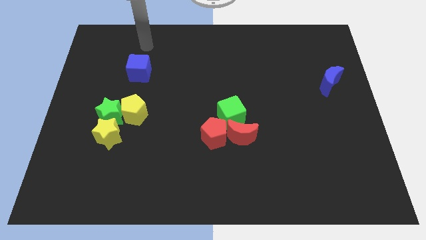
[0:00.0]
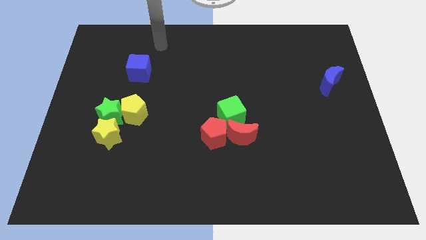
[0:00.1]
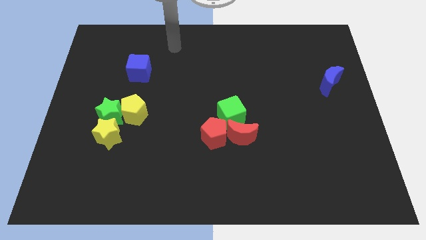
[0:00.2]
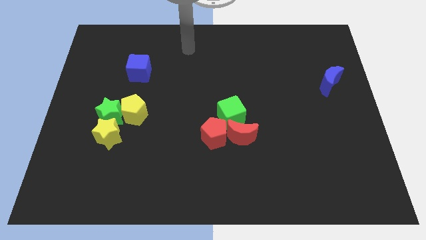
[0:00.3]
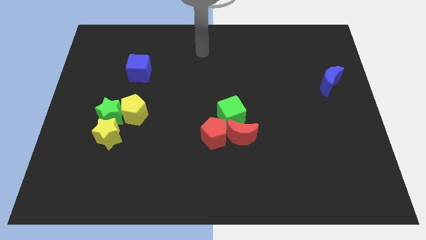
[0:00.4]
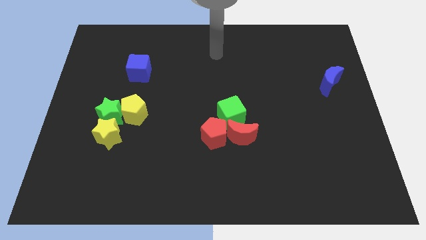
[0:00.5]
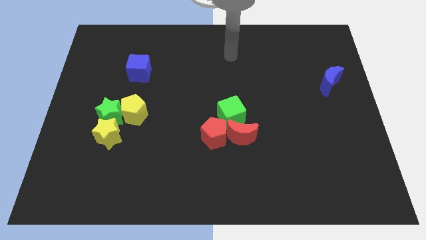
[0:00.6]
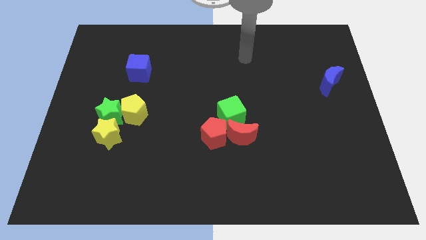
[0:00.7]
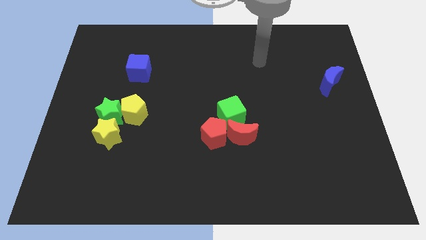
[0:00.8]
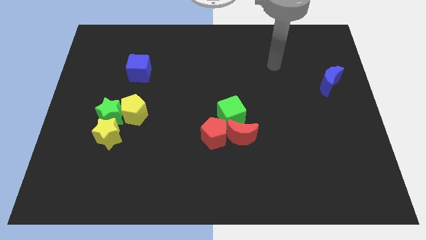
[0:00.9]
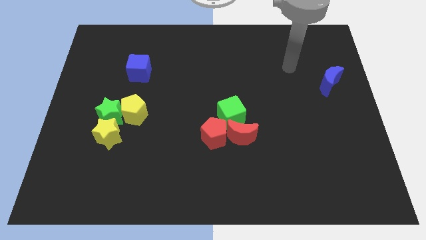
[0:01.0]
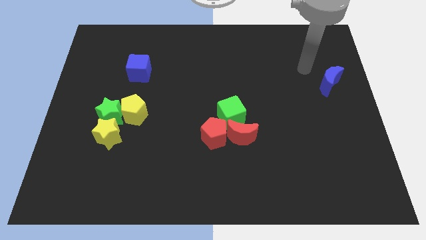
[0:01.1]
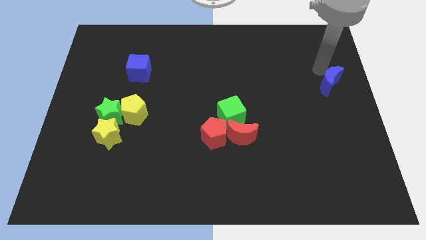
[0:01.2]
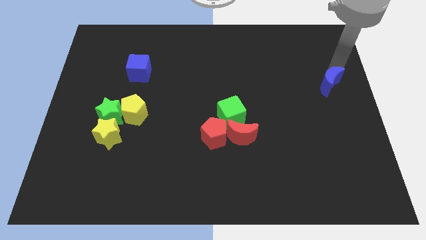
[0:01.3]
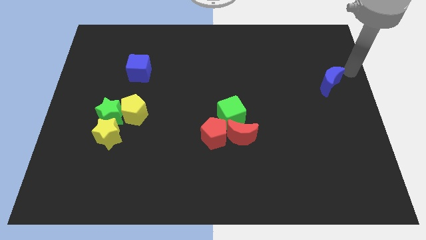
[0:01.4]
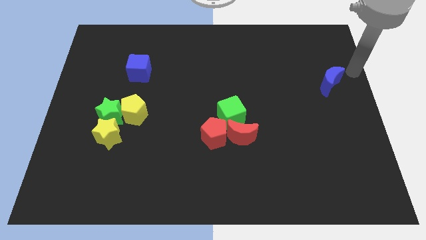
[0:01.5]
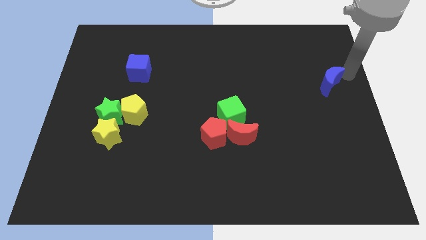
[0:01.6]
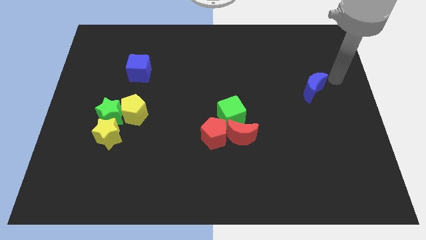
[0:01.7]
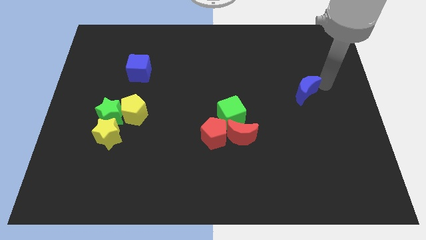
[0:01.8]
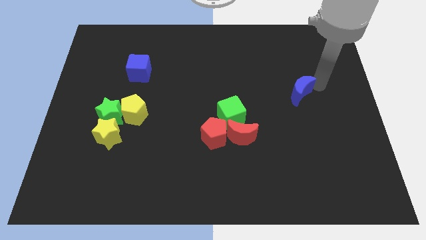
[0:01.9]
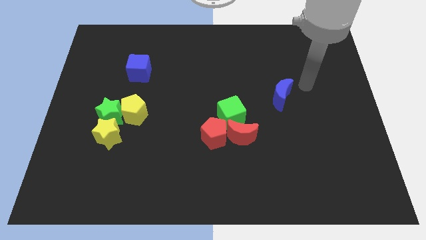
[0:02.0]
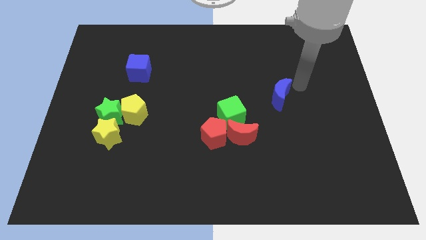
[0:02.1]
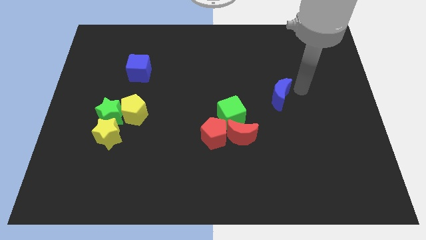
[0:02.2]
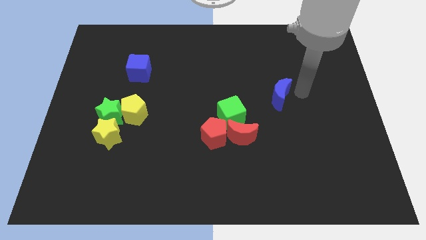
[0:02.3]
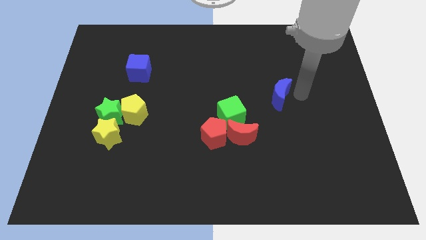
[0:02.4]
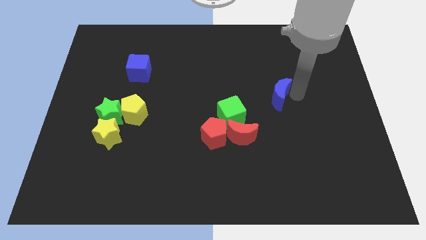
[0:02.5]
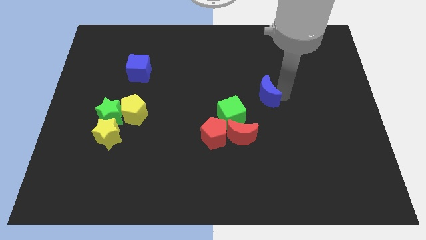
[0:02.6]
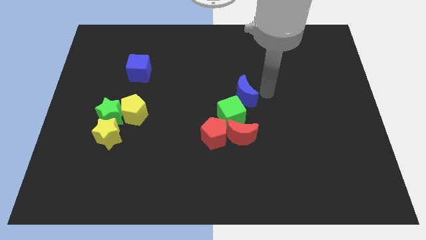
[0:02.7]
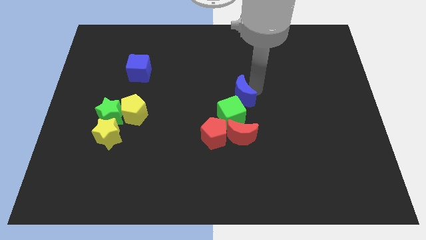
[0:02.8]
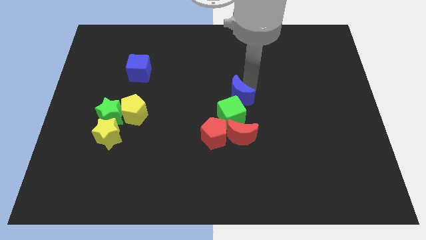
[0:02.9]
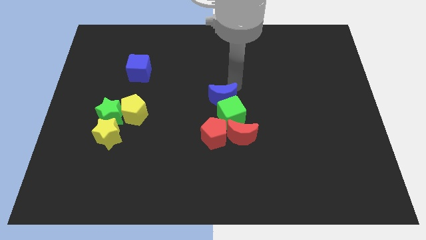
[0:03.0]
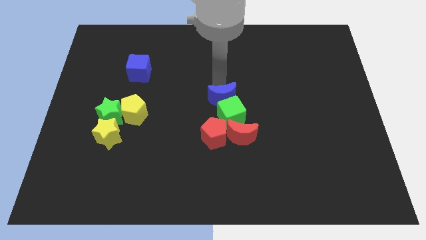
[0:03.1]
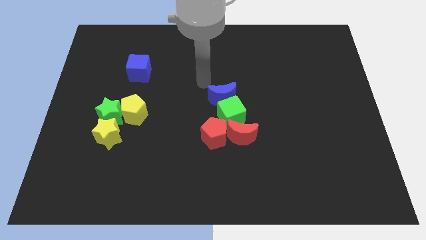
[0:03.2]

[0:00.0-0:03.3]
place the blue crescent to the top of the green cube

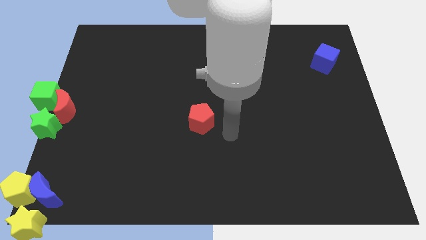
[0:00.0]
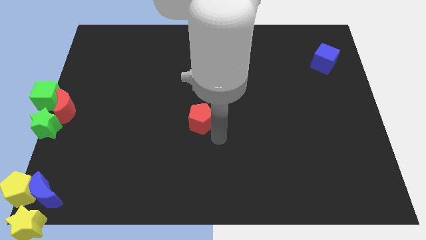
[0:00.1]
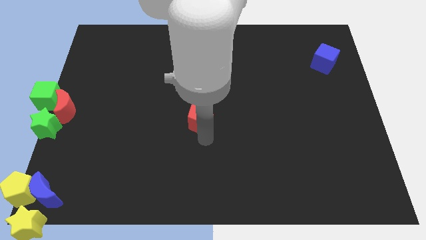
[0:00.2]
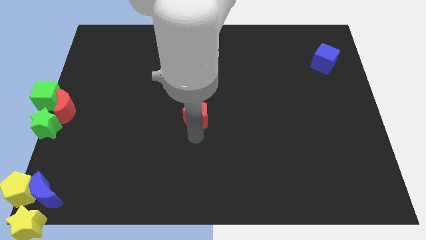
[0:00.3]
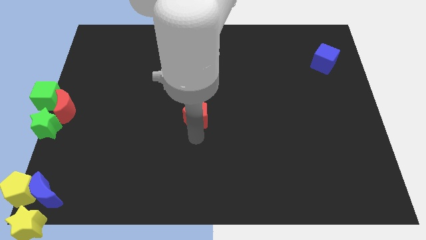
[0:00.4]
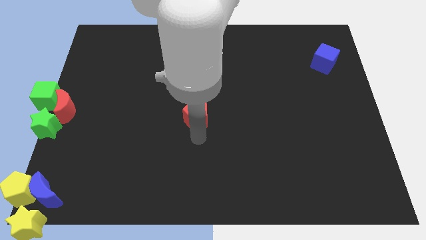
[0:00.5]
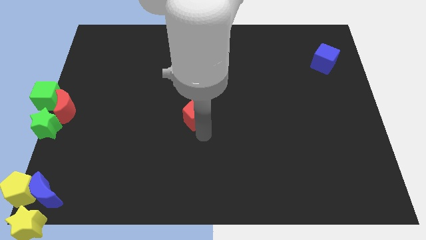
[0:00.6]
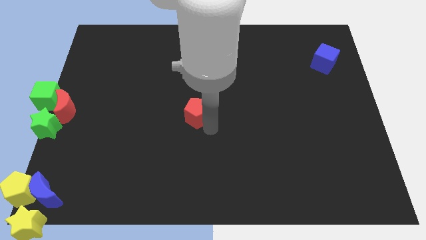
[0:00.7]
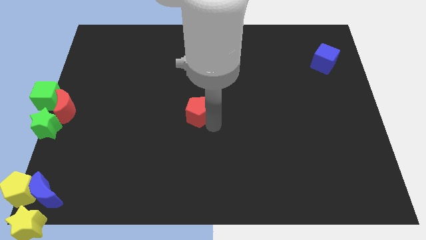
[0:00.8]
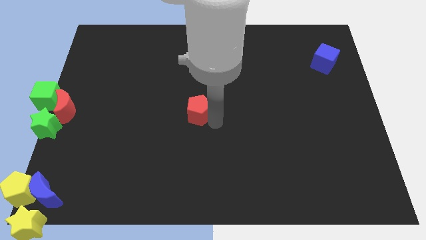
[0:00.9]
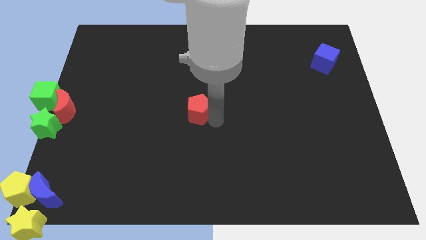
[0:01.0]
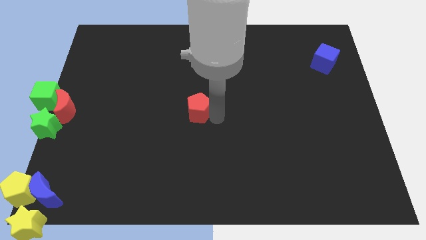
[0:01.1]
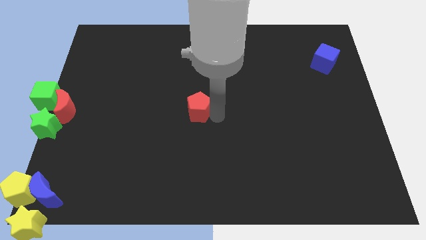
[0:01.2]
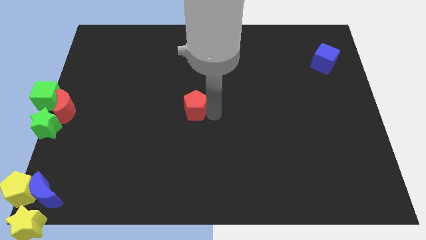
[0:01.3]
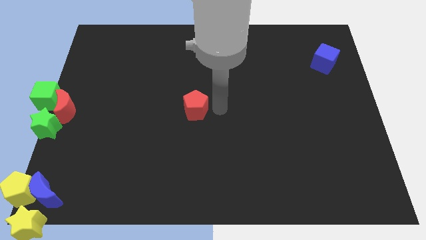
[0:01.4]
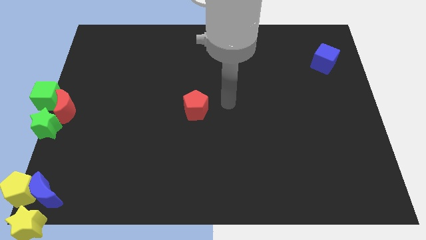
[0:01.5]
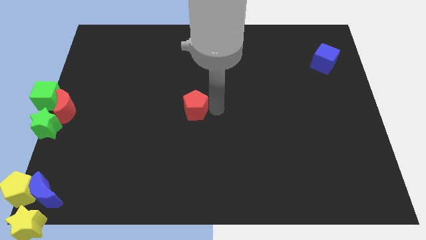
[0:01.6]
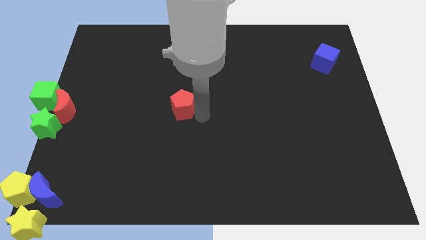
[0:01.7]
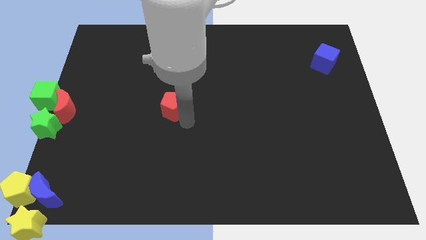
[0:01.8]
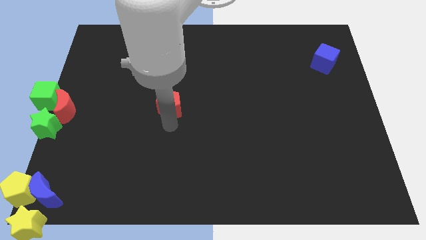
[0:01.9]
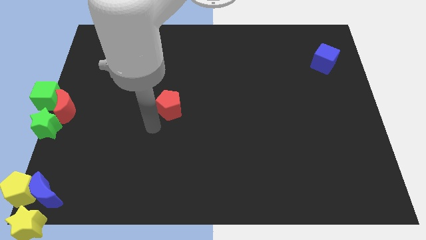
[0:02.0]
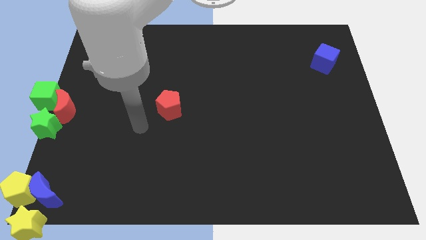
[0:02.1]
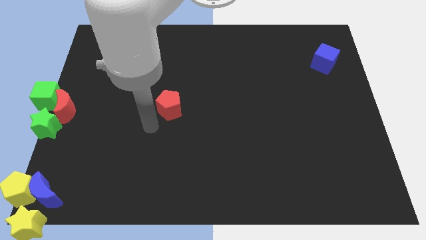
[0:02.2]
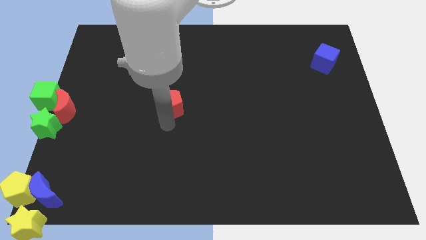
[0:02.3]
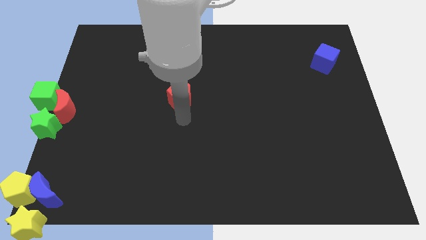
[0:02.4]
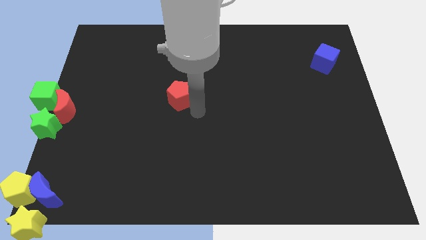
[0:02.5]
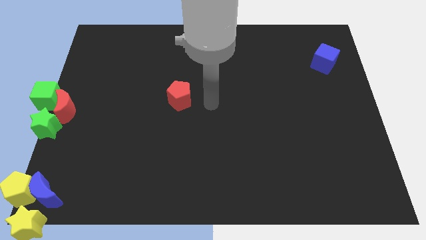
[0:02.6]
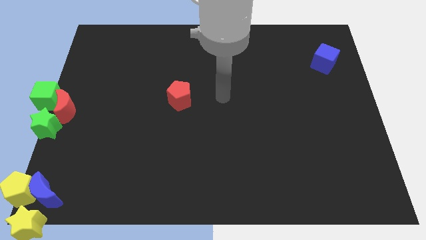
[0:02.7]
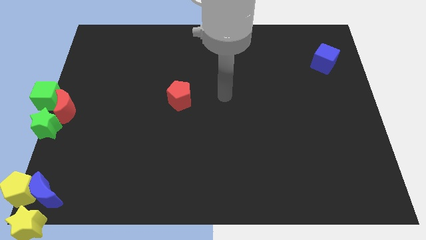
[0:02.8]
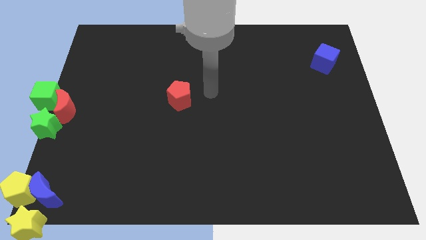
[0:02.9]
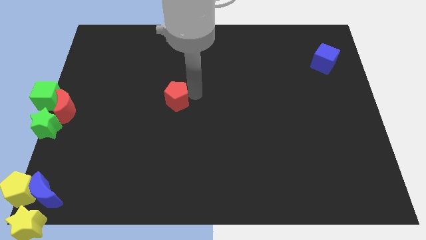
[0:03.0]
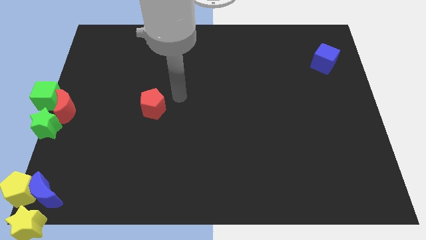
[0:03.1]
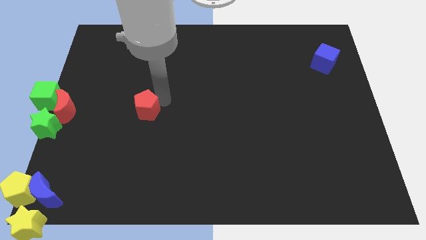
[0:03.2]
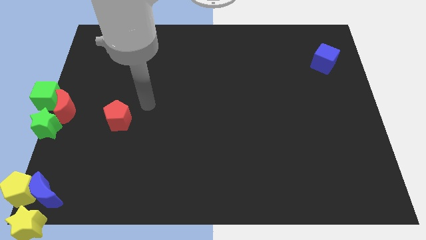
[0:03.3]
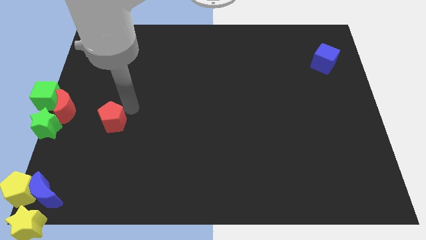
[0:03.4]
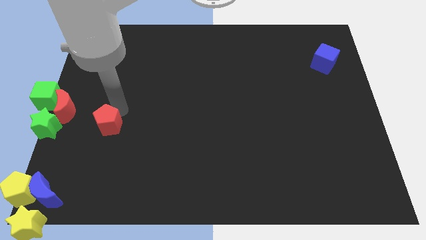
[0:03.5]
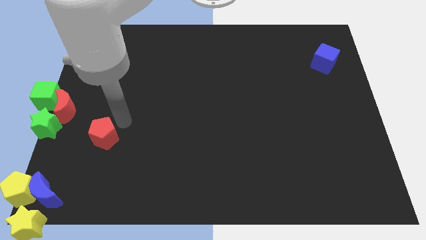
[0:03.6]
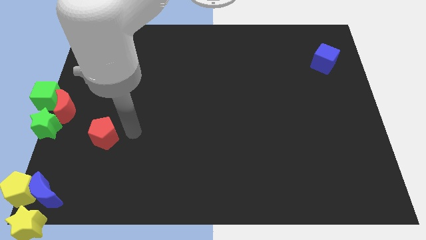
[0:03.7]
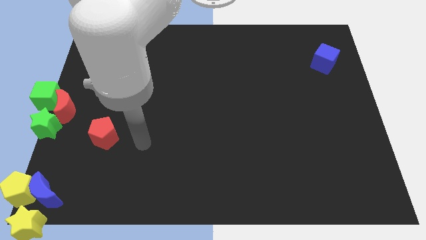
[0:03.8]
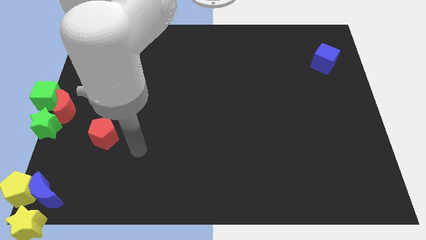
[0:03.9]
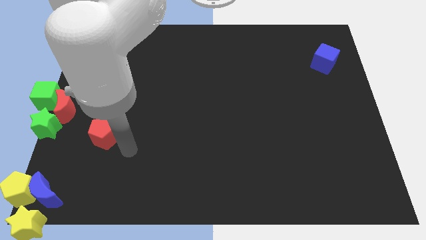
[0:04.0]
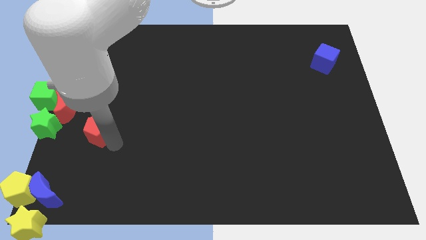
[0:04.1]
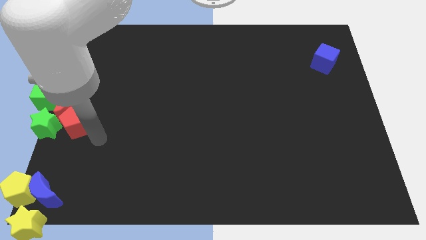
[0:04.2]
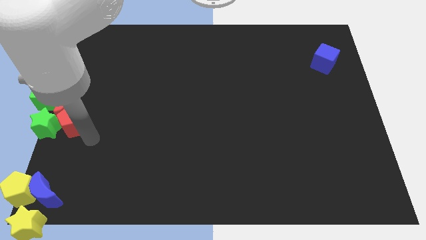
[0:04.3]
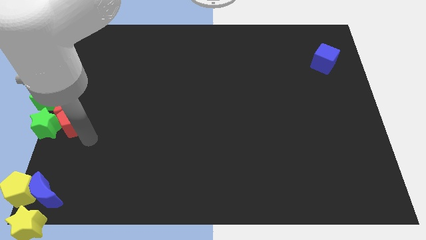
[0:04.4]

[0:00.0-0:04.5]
move red pentagon into group of blocks

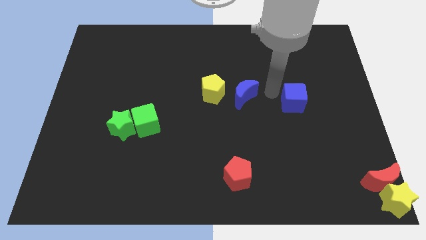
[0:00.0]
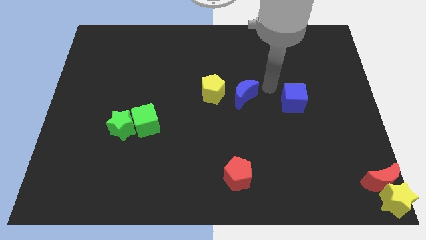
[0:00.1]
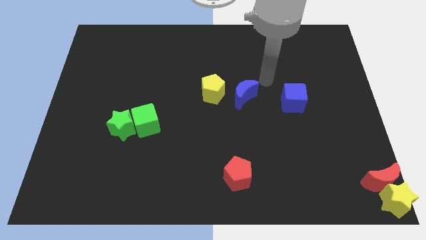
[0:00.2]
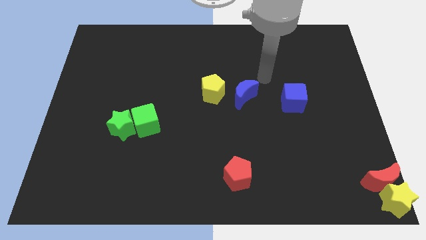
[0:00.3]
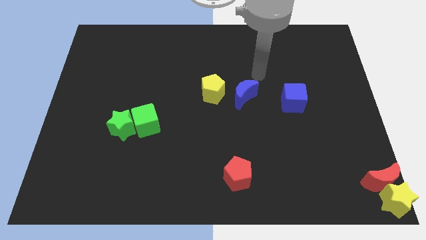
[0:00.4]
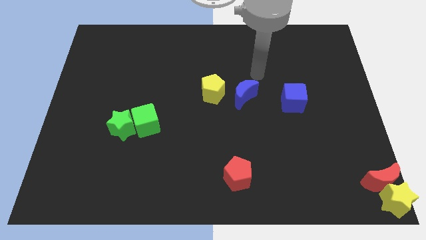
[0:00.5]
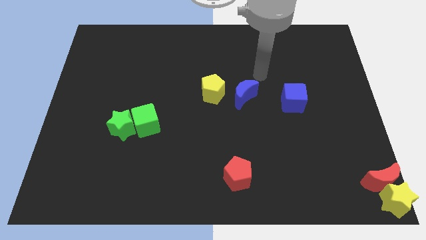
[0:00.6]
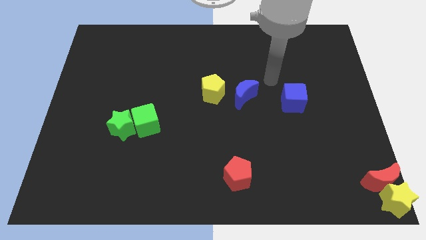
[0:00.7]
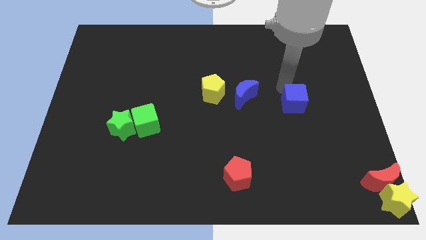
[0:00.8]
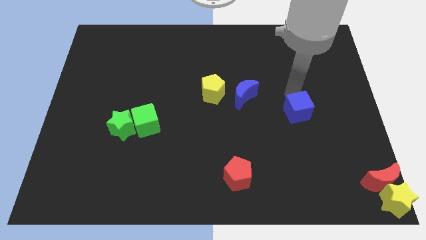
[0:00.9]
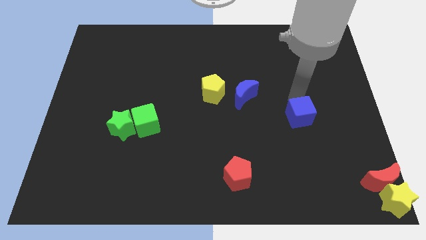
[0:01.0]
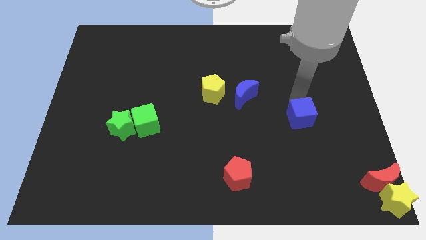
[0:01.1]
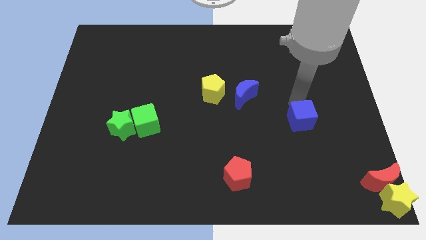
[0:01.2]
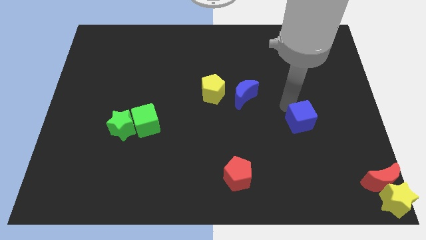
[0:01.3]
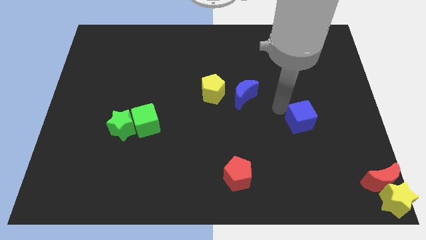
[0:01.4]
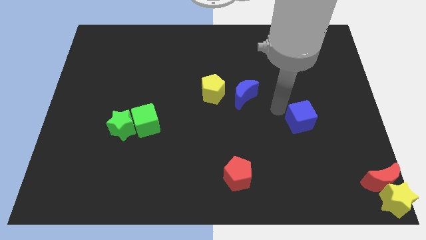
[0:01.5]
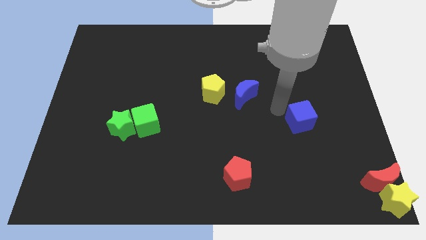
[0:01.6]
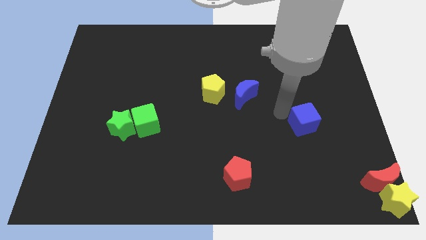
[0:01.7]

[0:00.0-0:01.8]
slide the blue cube diagonally on the bottom right side of the blue crescent
